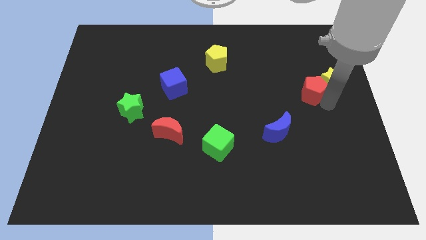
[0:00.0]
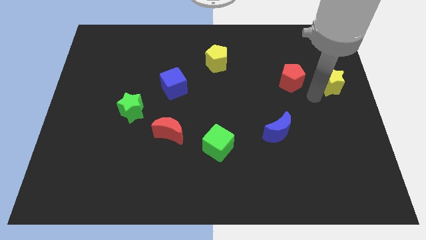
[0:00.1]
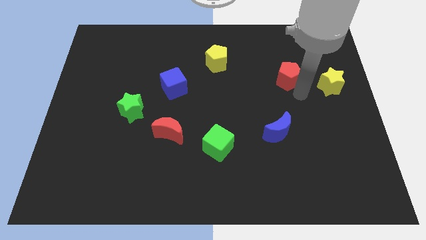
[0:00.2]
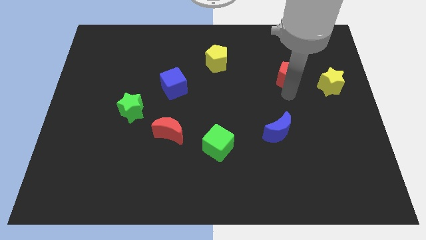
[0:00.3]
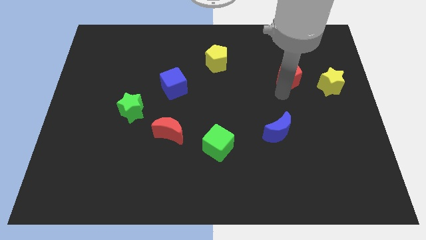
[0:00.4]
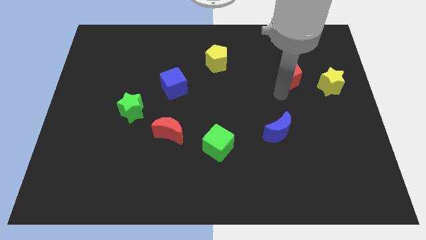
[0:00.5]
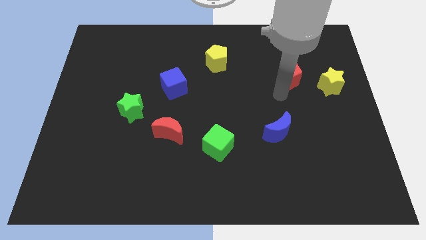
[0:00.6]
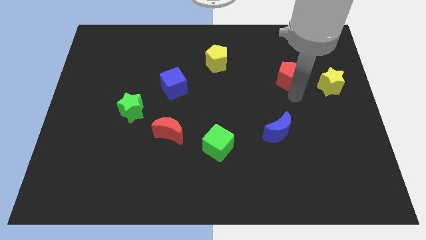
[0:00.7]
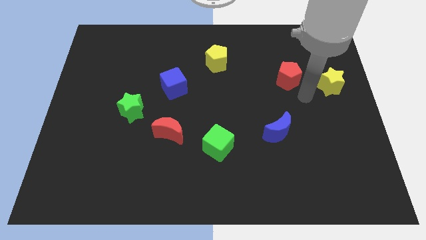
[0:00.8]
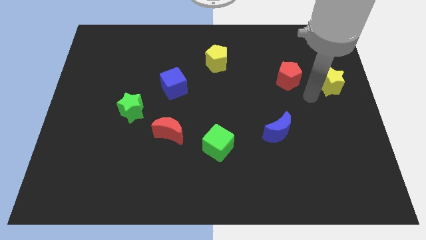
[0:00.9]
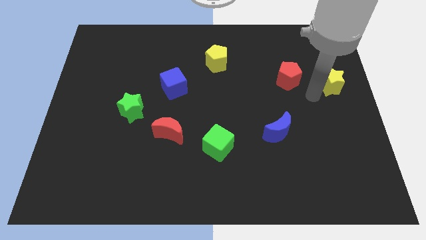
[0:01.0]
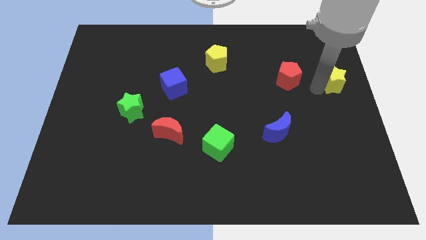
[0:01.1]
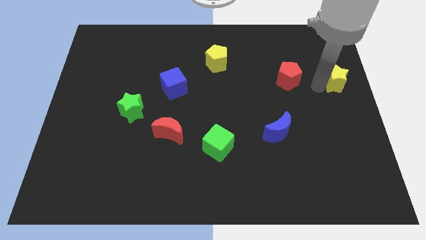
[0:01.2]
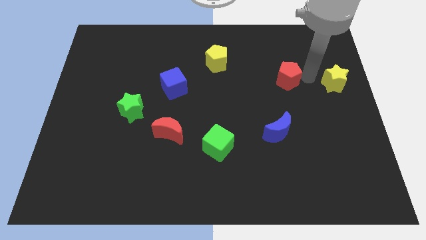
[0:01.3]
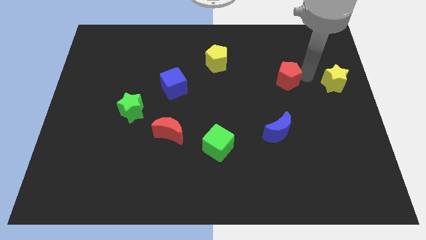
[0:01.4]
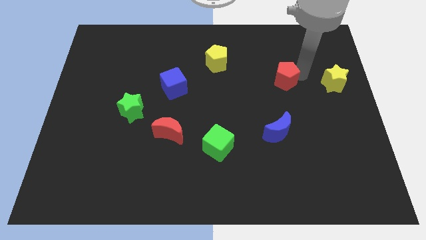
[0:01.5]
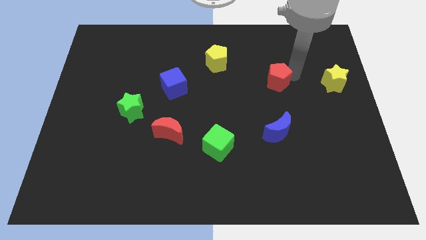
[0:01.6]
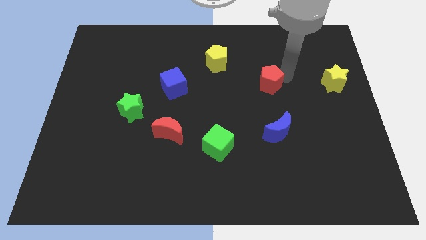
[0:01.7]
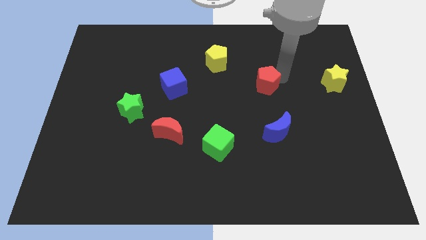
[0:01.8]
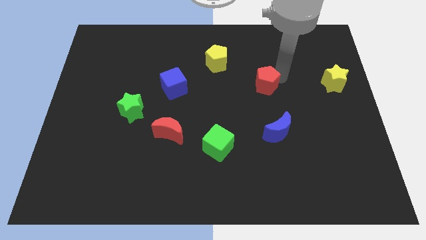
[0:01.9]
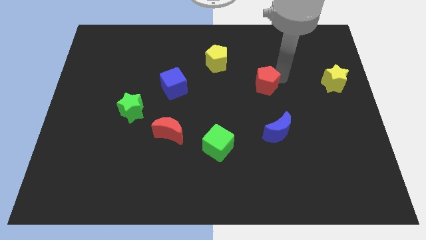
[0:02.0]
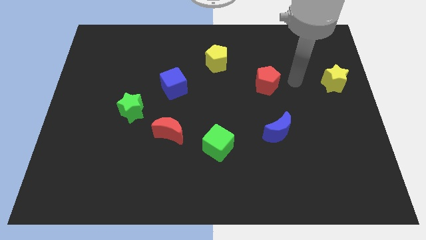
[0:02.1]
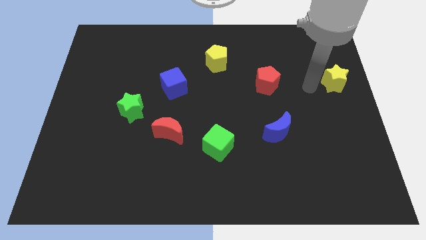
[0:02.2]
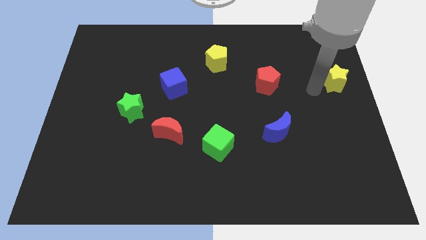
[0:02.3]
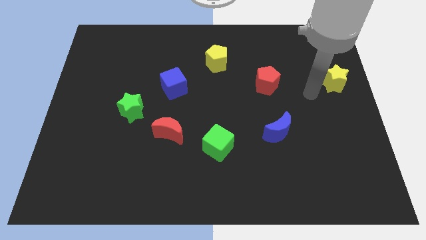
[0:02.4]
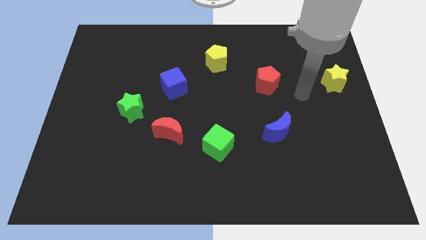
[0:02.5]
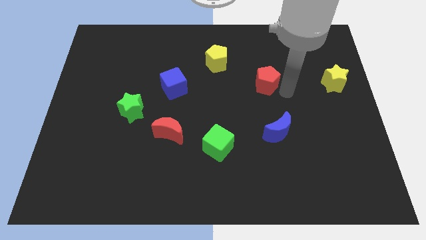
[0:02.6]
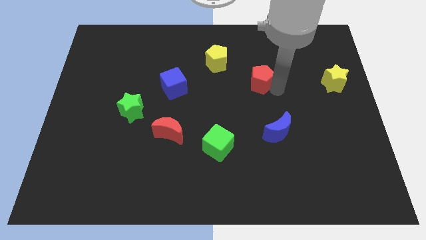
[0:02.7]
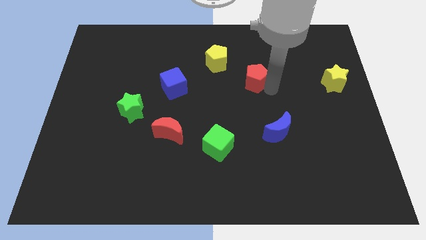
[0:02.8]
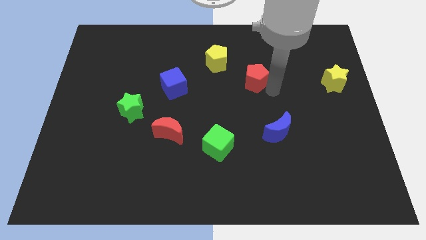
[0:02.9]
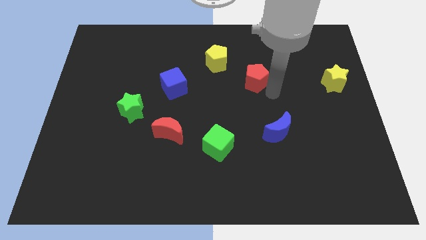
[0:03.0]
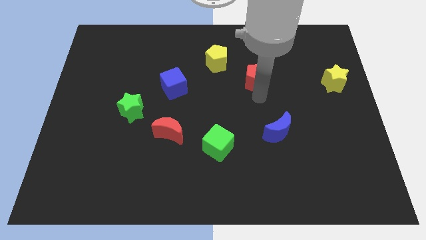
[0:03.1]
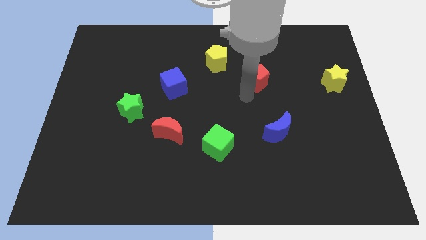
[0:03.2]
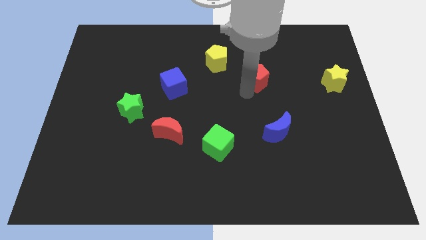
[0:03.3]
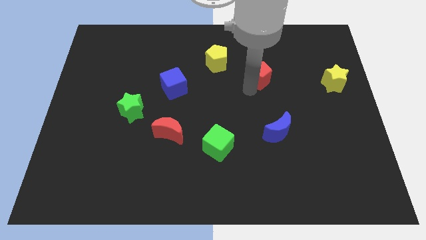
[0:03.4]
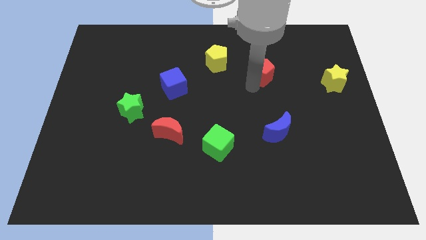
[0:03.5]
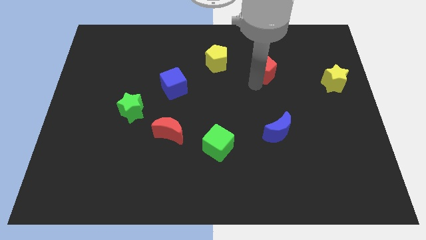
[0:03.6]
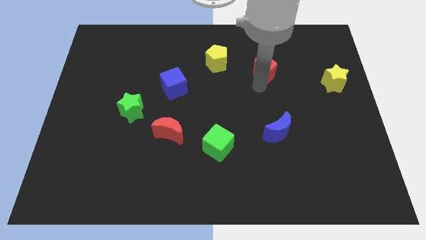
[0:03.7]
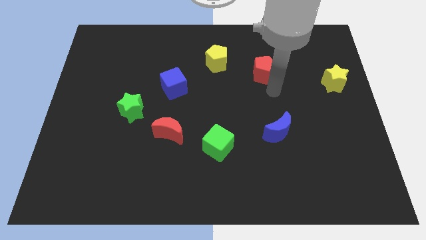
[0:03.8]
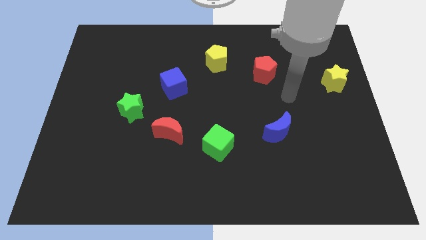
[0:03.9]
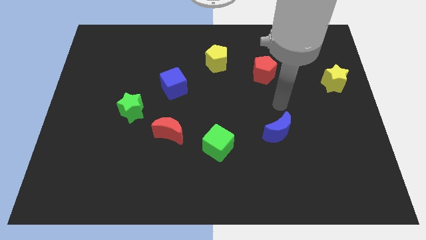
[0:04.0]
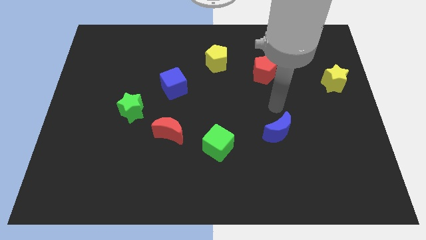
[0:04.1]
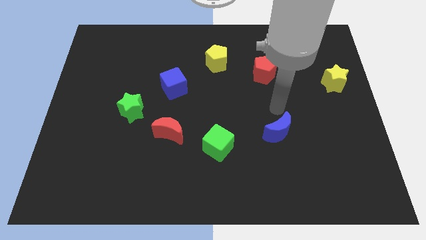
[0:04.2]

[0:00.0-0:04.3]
place the red pentagon on the bottom right of yellow pentagon

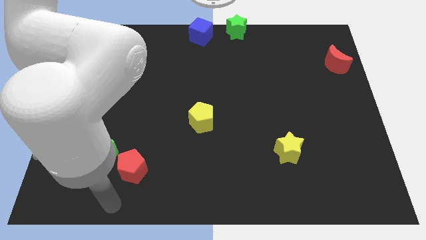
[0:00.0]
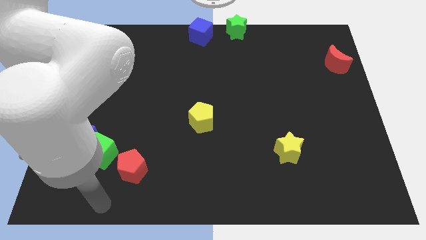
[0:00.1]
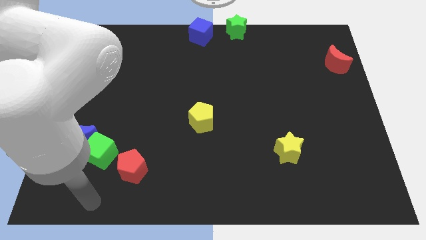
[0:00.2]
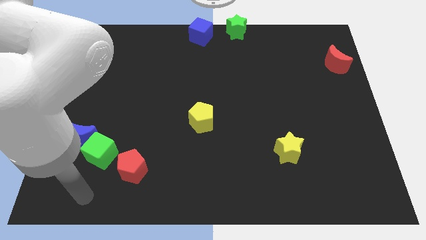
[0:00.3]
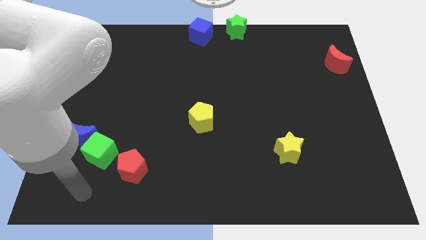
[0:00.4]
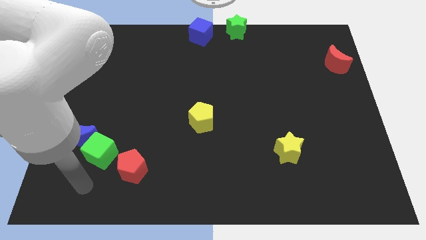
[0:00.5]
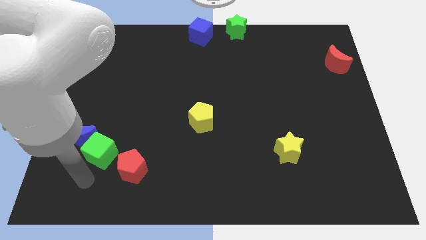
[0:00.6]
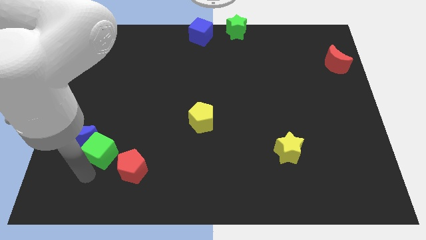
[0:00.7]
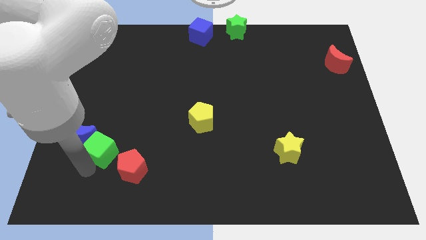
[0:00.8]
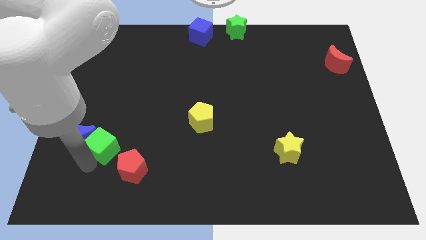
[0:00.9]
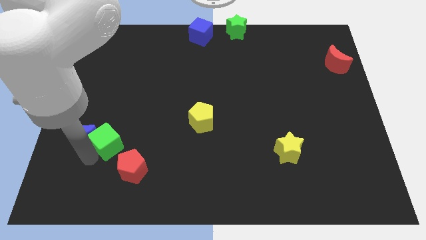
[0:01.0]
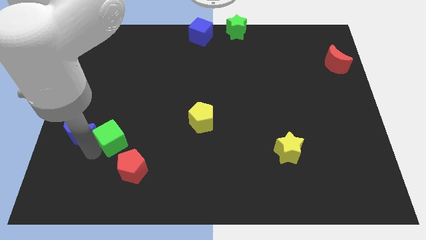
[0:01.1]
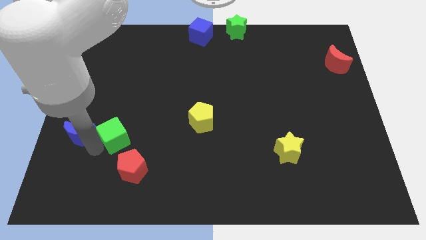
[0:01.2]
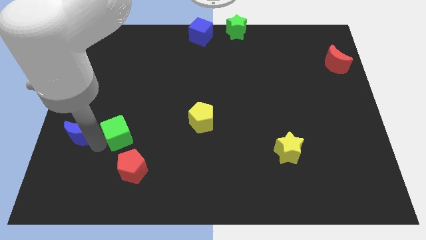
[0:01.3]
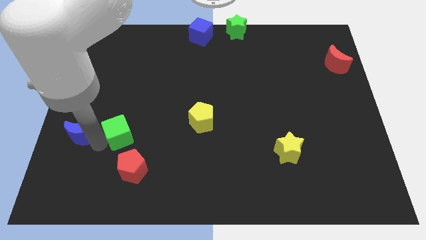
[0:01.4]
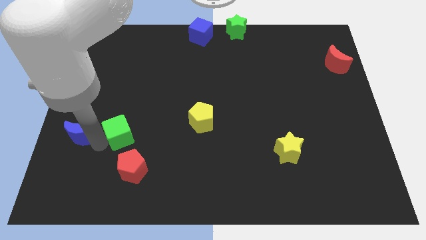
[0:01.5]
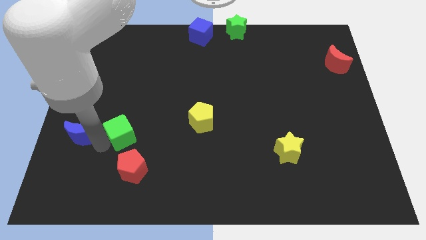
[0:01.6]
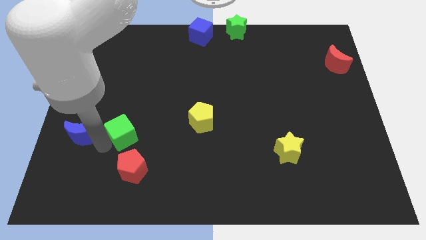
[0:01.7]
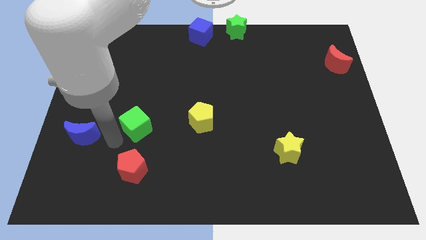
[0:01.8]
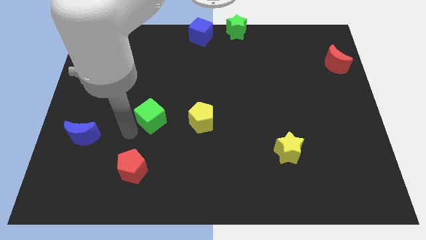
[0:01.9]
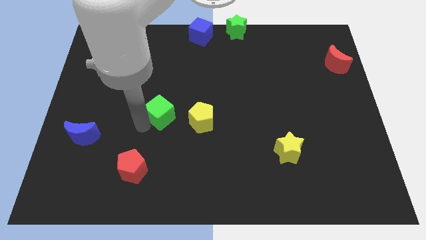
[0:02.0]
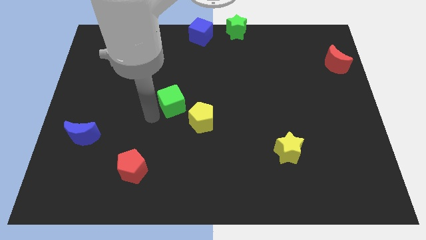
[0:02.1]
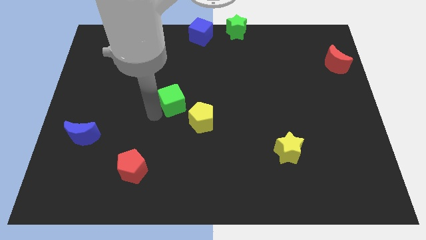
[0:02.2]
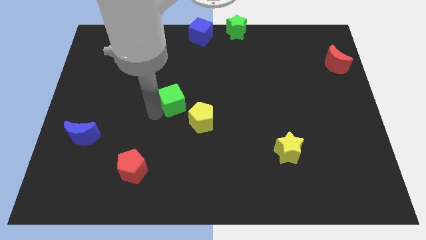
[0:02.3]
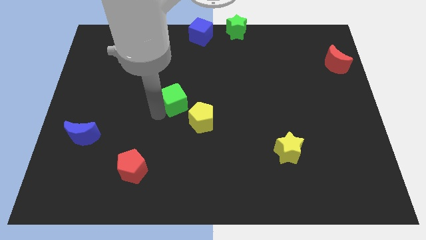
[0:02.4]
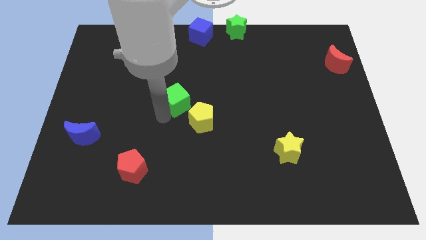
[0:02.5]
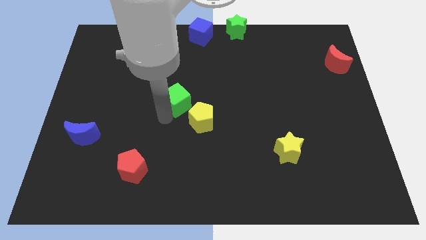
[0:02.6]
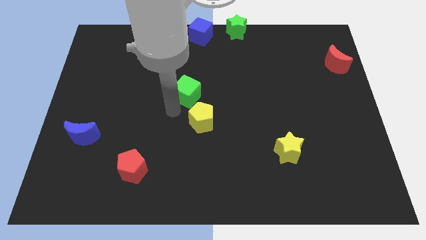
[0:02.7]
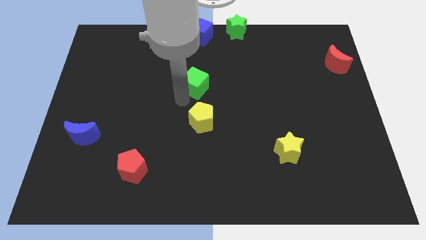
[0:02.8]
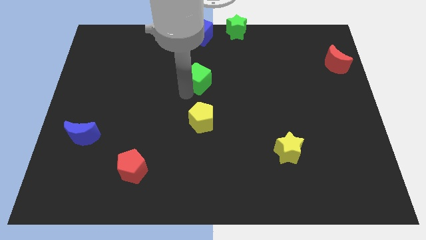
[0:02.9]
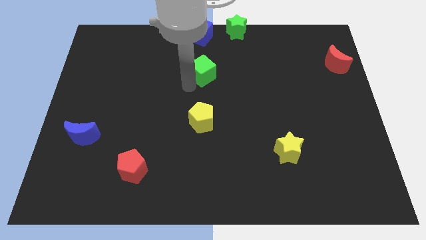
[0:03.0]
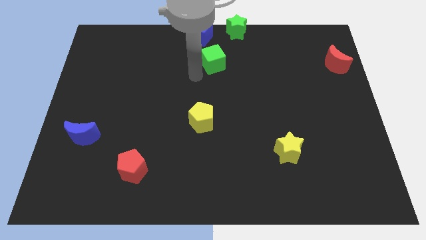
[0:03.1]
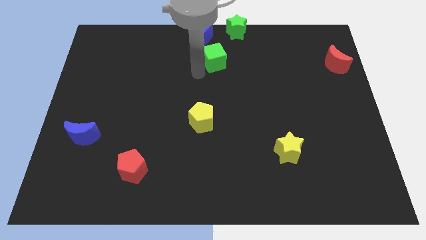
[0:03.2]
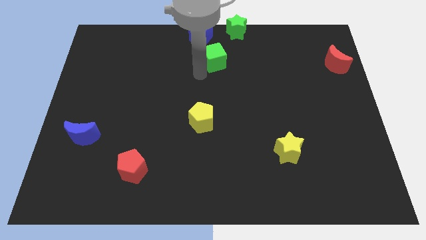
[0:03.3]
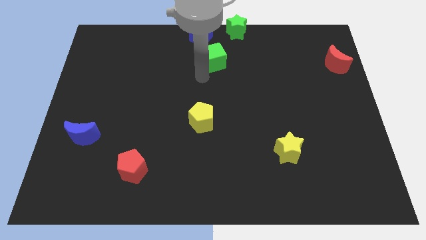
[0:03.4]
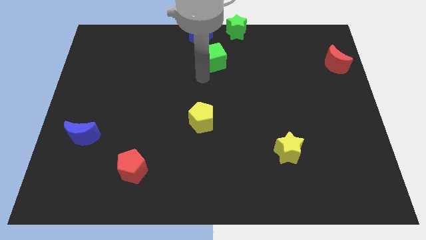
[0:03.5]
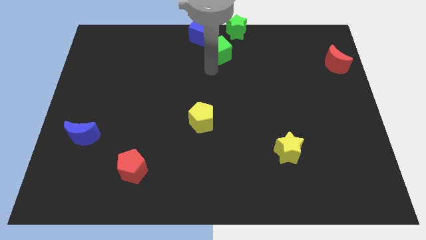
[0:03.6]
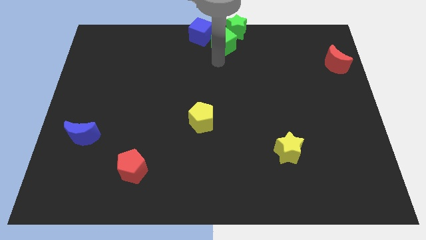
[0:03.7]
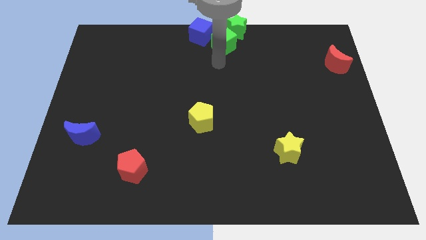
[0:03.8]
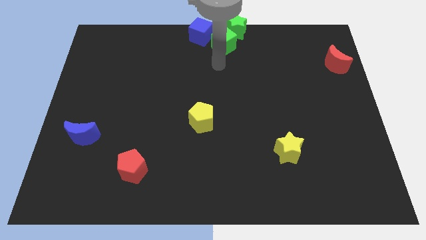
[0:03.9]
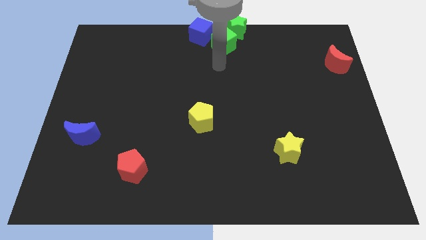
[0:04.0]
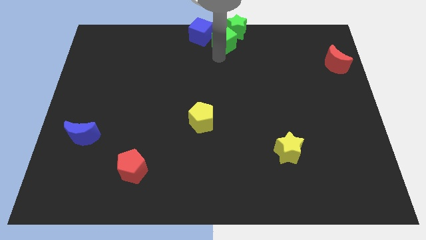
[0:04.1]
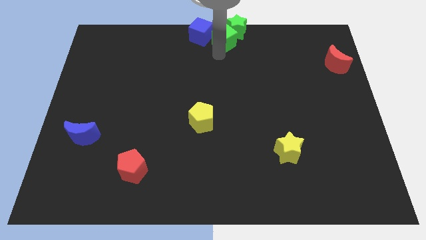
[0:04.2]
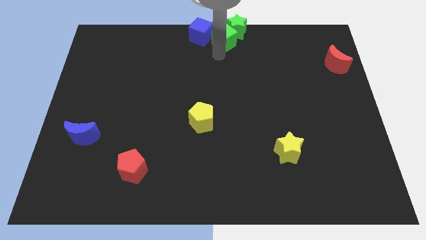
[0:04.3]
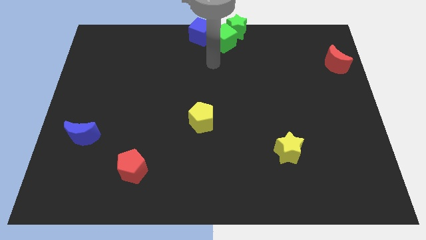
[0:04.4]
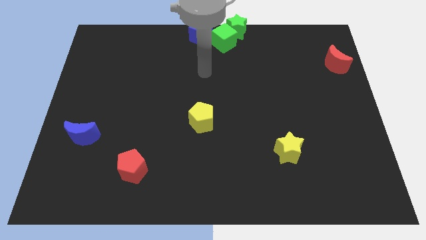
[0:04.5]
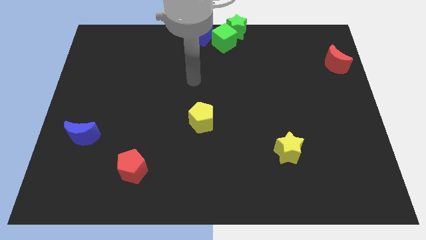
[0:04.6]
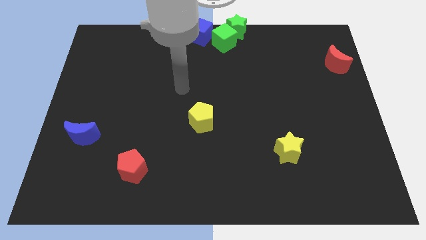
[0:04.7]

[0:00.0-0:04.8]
push the green cube into the green star
